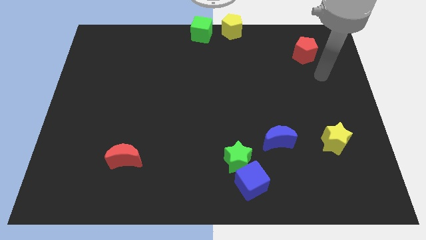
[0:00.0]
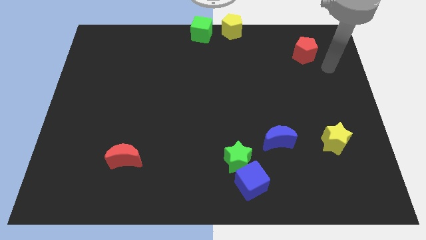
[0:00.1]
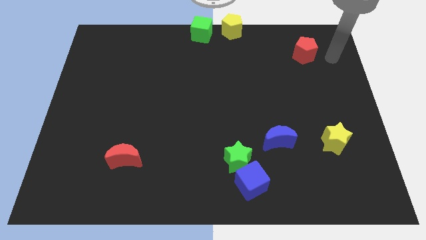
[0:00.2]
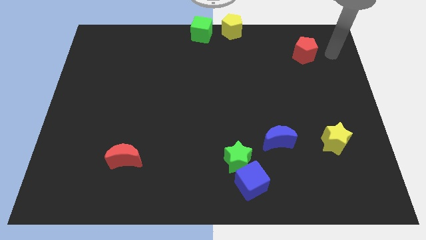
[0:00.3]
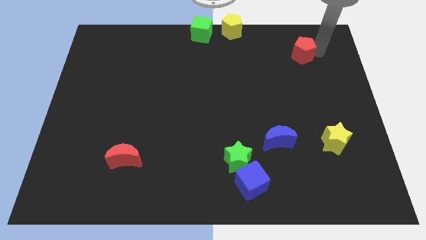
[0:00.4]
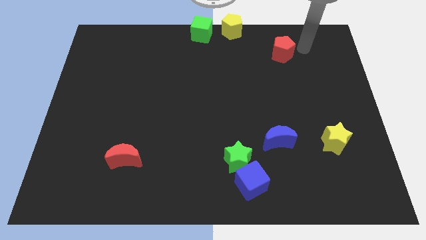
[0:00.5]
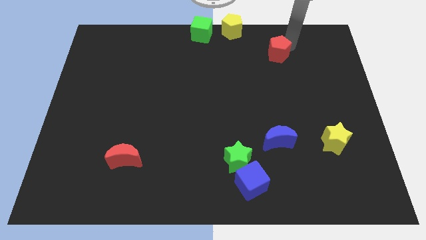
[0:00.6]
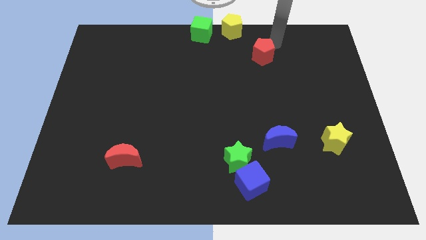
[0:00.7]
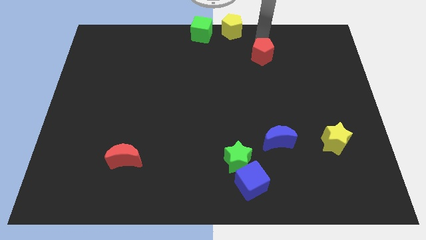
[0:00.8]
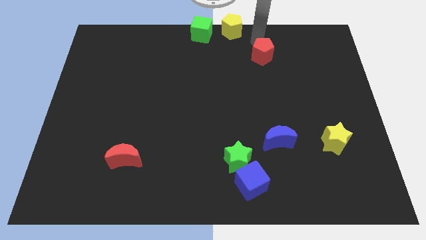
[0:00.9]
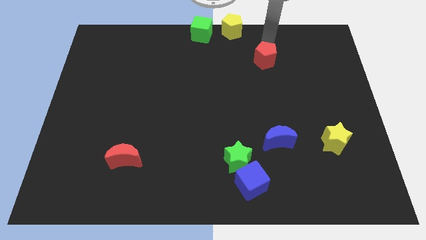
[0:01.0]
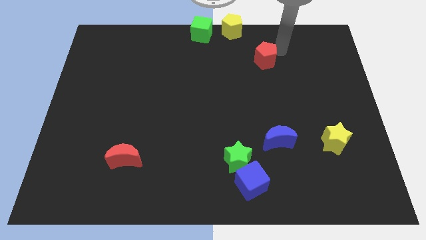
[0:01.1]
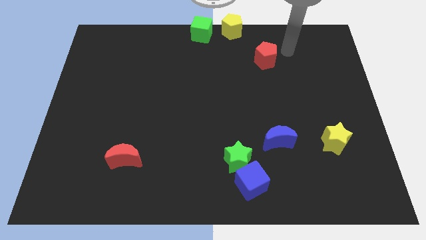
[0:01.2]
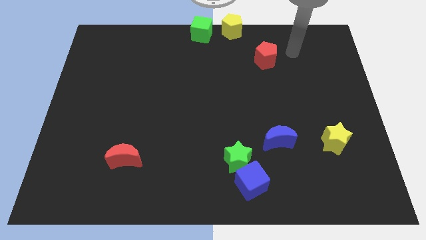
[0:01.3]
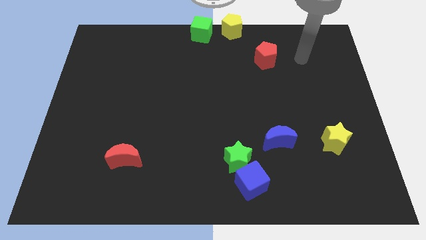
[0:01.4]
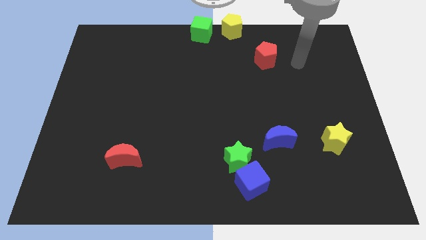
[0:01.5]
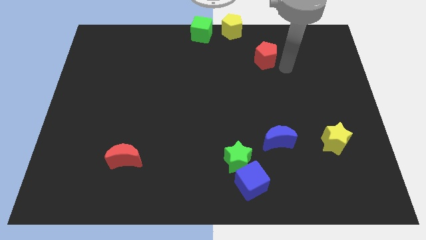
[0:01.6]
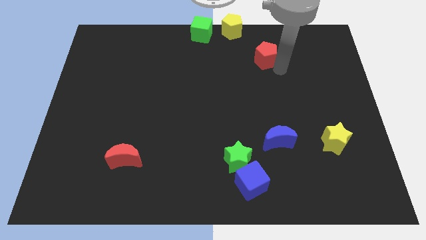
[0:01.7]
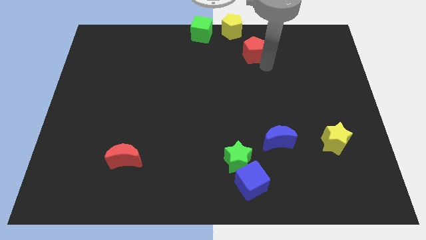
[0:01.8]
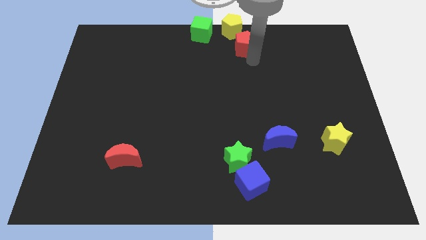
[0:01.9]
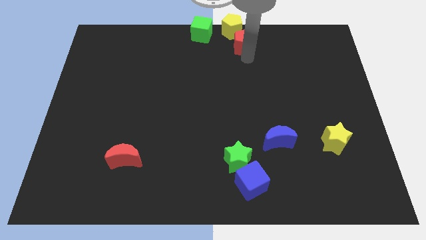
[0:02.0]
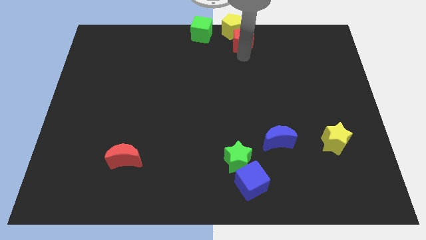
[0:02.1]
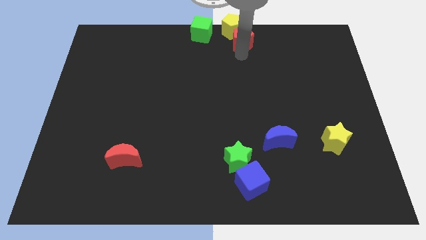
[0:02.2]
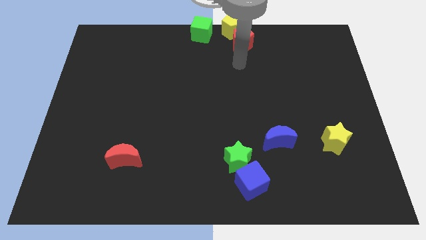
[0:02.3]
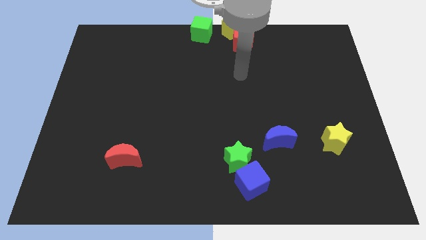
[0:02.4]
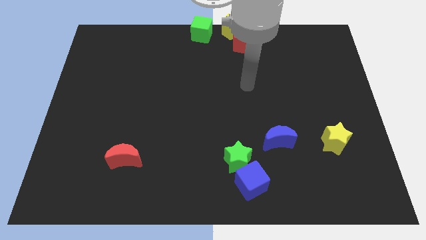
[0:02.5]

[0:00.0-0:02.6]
move the red pentagon at the bottom of yellow pentagon

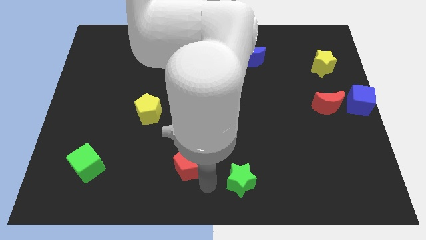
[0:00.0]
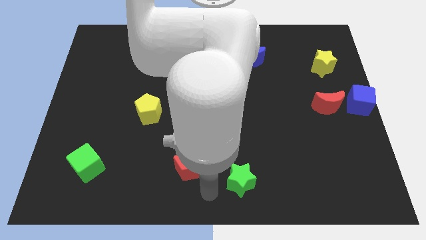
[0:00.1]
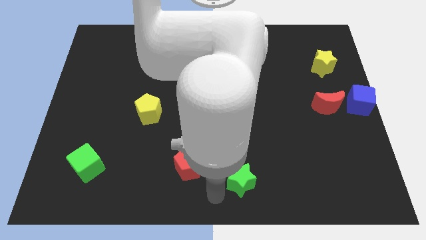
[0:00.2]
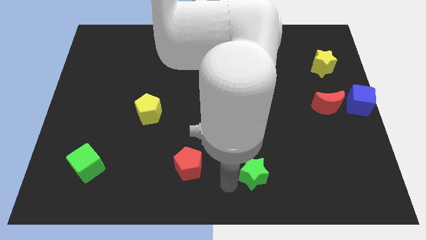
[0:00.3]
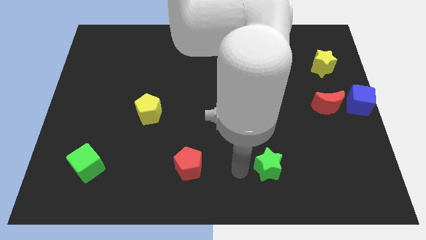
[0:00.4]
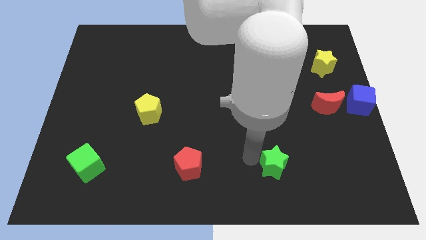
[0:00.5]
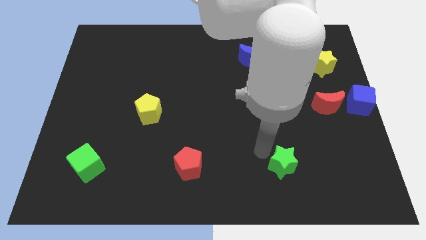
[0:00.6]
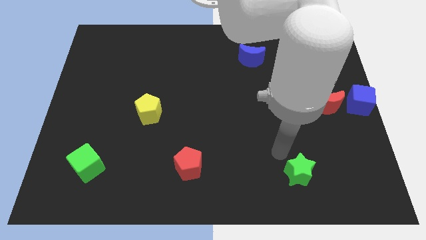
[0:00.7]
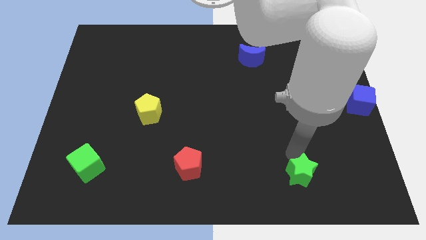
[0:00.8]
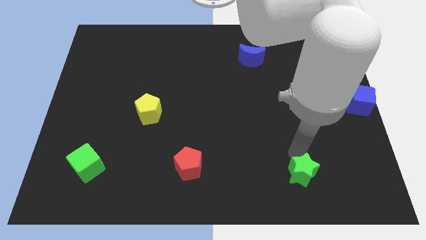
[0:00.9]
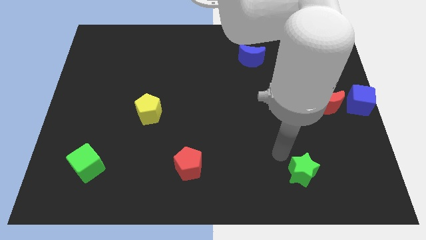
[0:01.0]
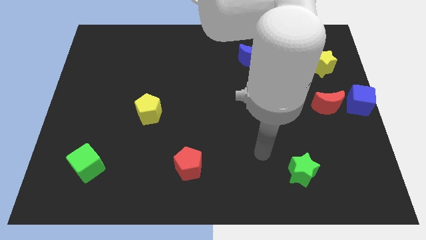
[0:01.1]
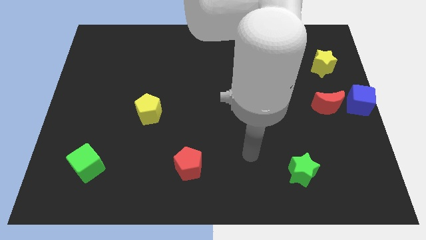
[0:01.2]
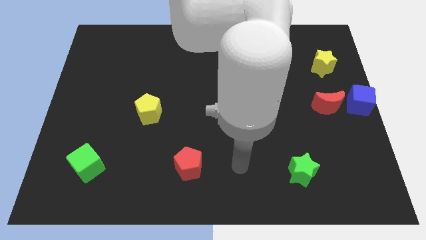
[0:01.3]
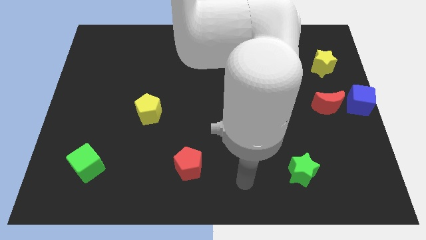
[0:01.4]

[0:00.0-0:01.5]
move the green star towards right

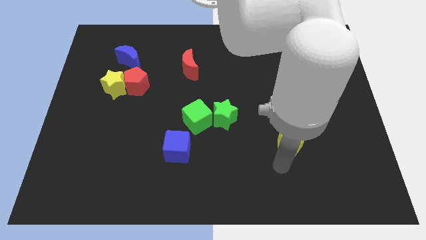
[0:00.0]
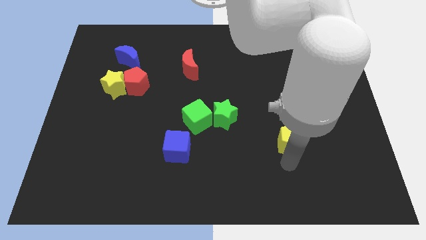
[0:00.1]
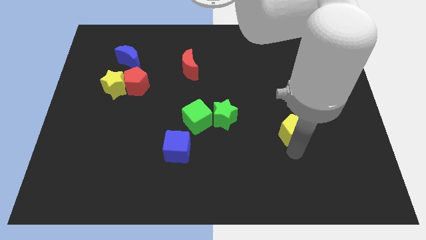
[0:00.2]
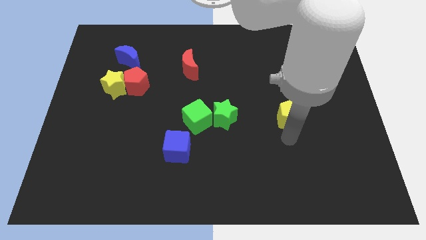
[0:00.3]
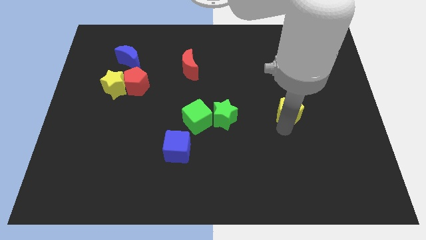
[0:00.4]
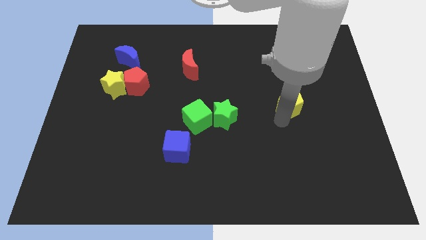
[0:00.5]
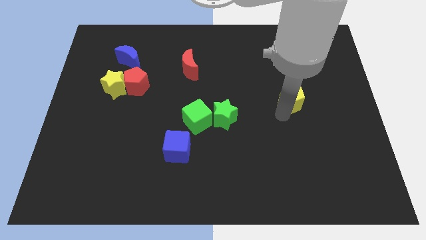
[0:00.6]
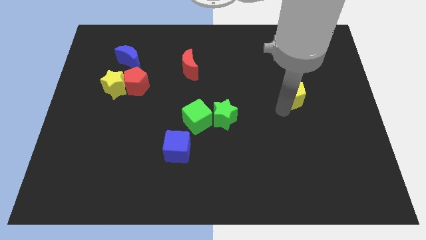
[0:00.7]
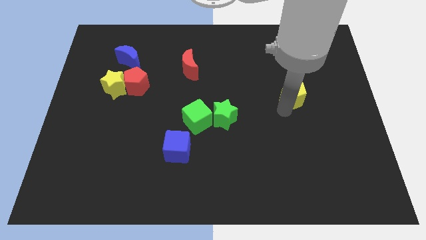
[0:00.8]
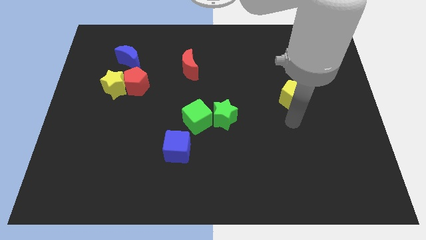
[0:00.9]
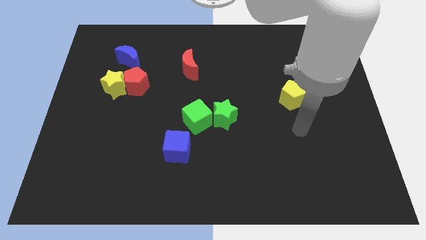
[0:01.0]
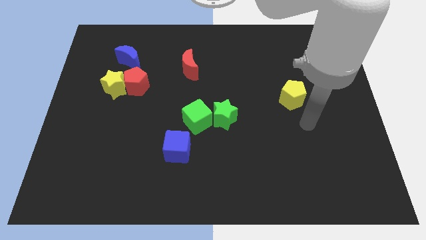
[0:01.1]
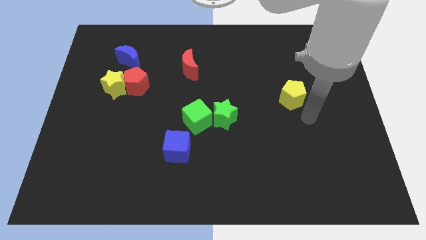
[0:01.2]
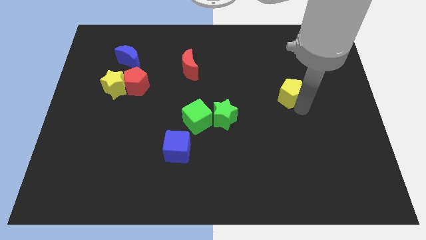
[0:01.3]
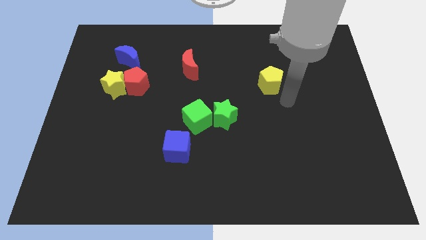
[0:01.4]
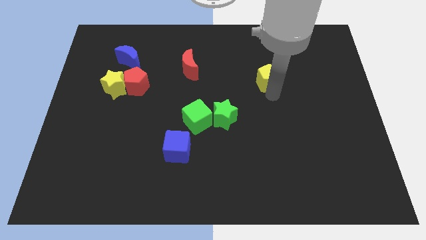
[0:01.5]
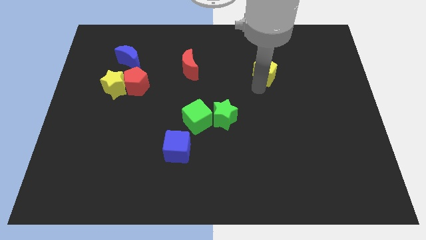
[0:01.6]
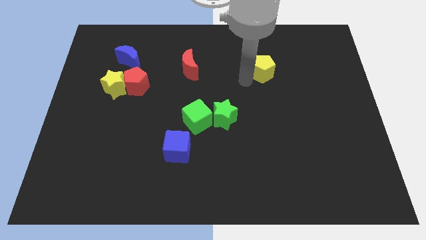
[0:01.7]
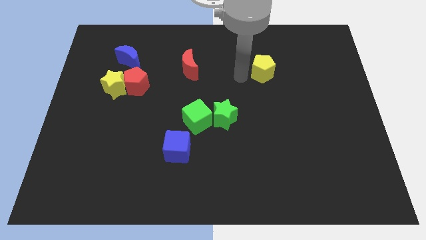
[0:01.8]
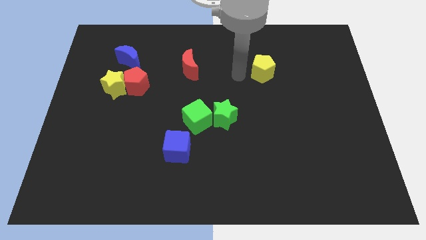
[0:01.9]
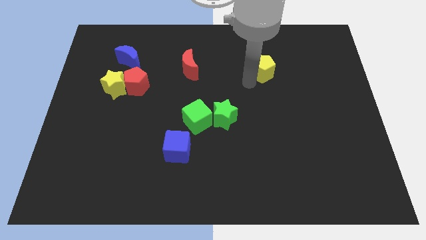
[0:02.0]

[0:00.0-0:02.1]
place yellow pentagon to right of red moon

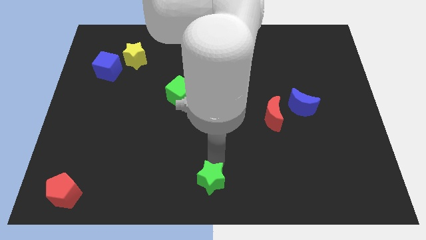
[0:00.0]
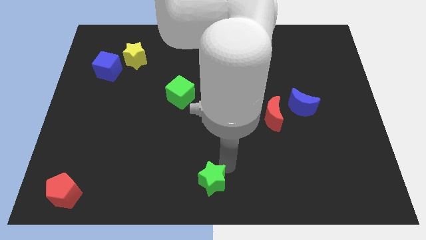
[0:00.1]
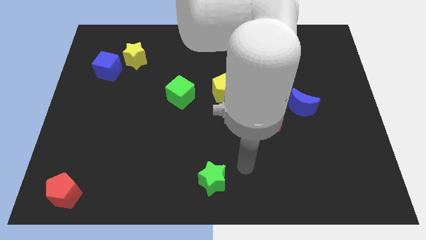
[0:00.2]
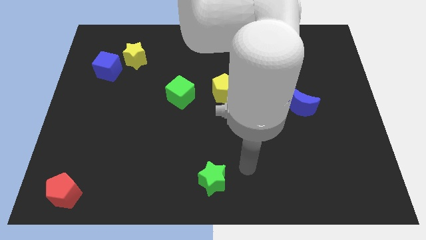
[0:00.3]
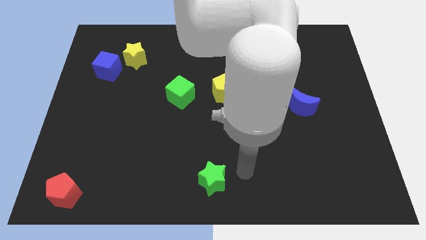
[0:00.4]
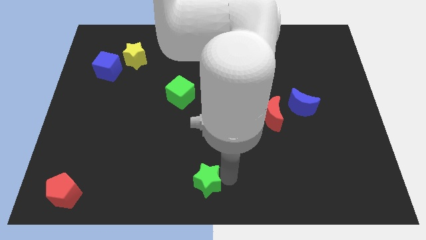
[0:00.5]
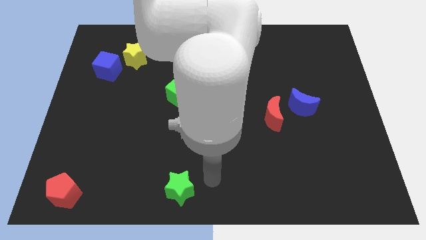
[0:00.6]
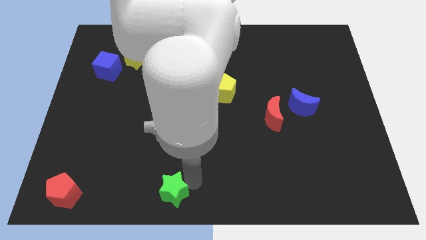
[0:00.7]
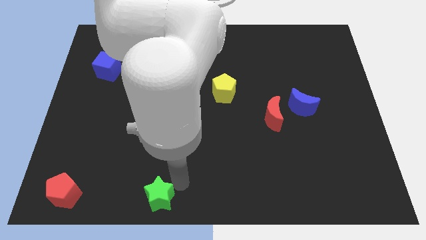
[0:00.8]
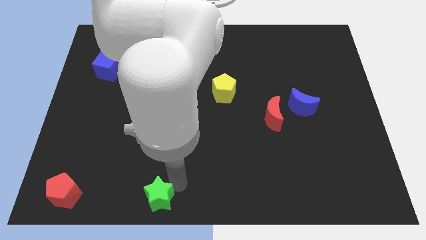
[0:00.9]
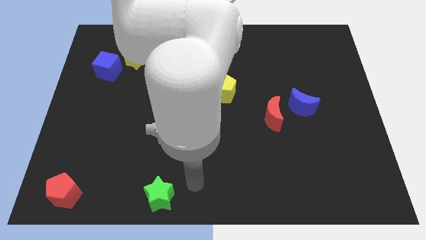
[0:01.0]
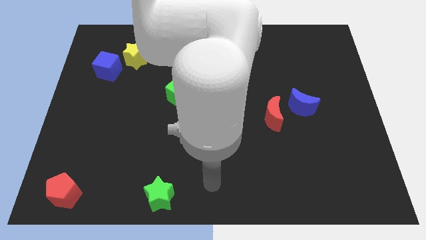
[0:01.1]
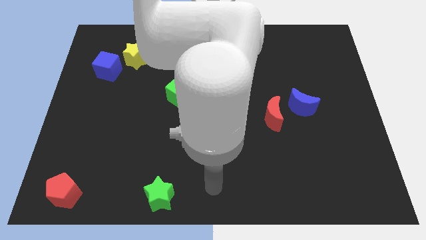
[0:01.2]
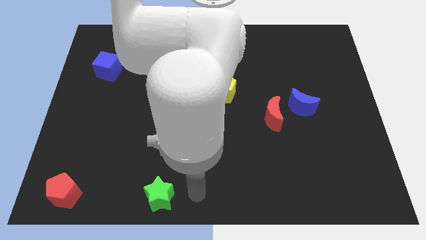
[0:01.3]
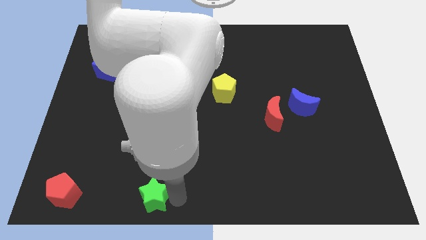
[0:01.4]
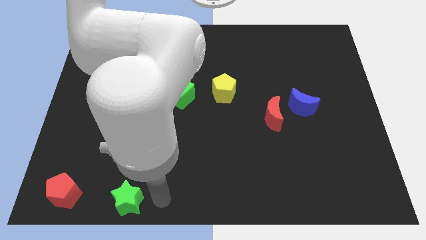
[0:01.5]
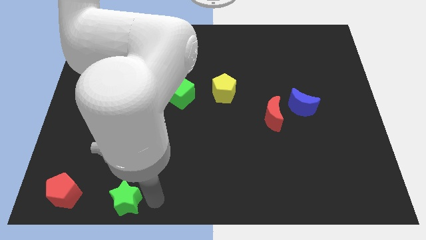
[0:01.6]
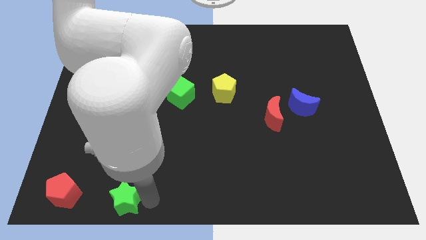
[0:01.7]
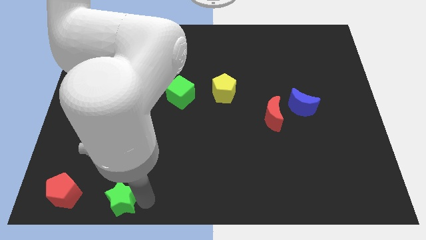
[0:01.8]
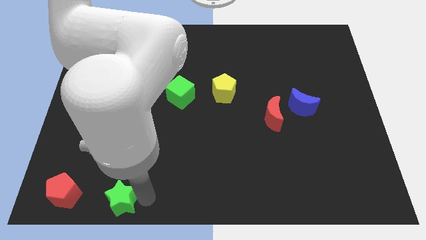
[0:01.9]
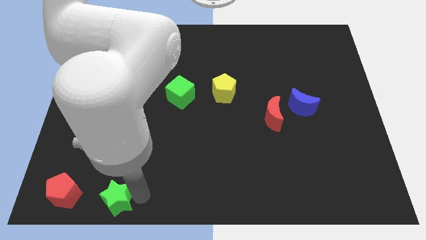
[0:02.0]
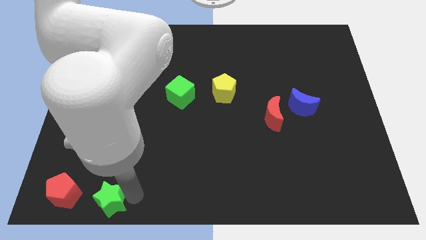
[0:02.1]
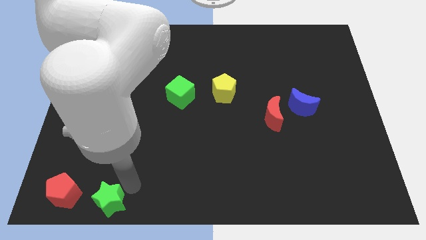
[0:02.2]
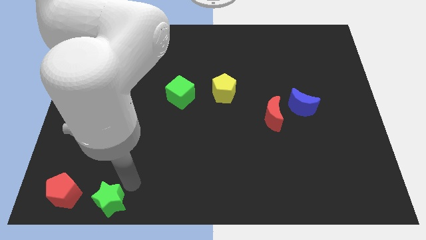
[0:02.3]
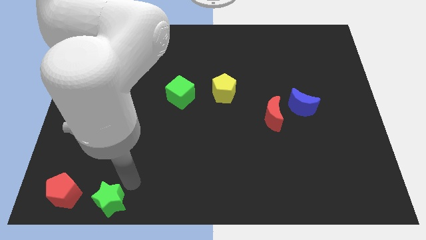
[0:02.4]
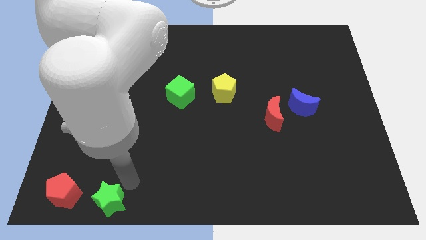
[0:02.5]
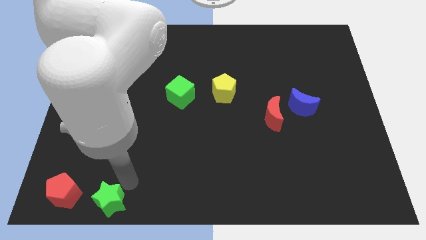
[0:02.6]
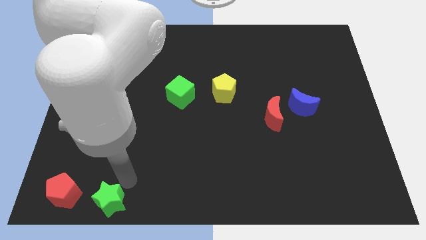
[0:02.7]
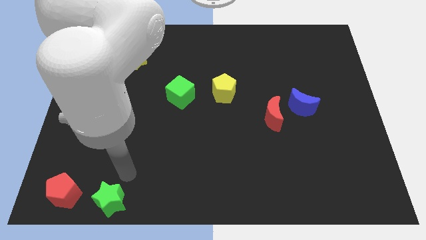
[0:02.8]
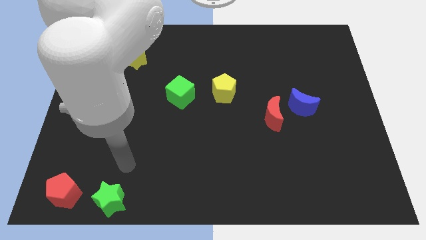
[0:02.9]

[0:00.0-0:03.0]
move the green star to the right of the red pentagon
